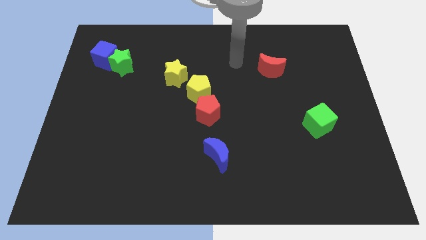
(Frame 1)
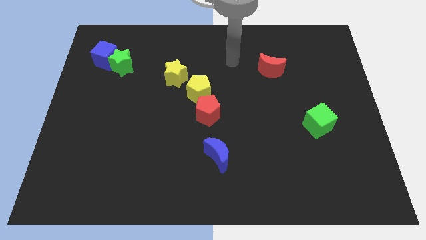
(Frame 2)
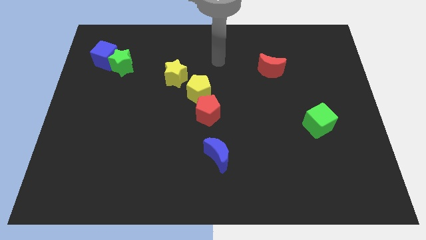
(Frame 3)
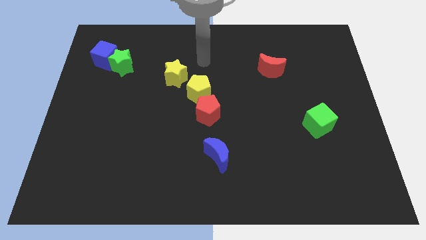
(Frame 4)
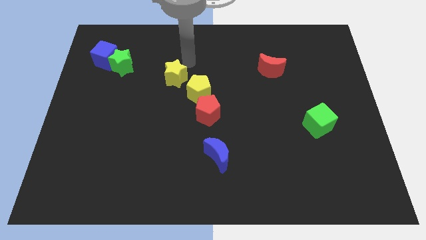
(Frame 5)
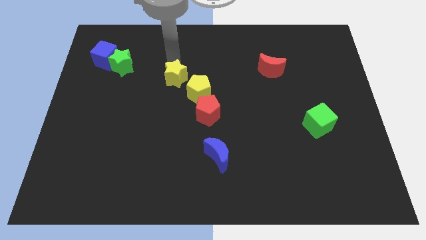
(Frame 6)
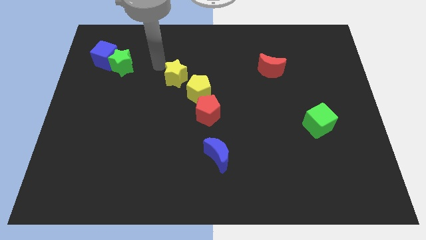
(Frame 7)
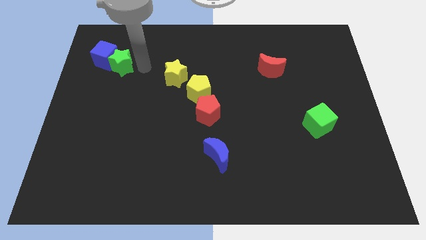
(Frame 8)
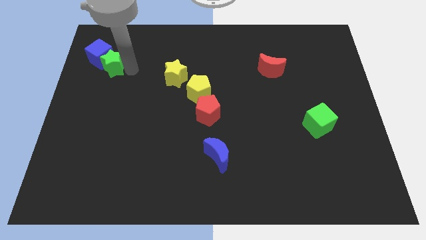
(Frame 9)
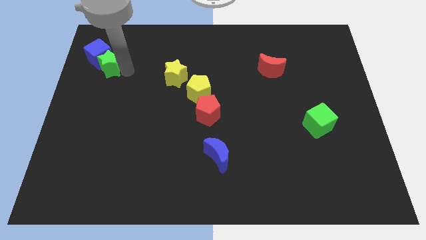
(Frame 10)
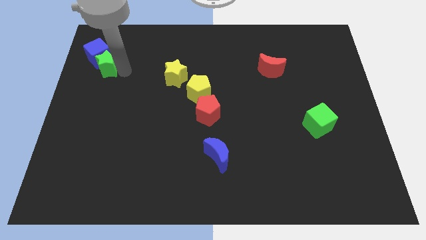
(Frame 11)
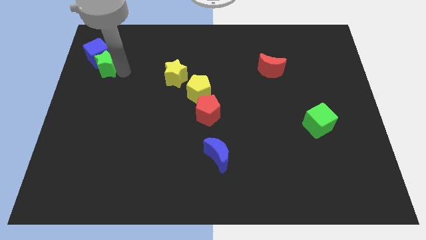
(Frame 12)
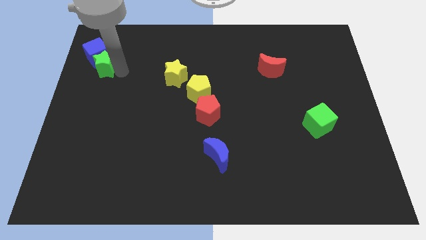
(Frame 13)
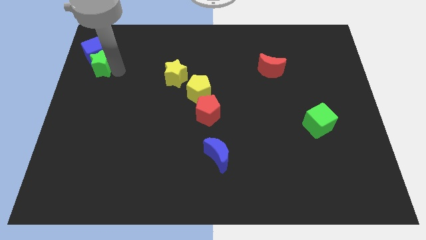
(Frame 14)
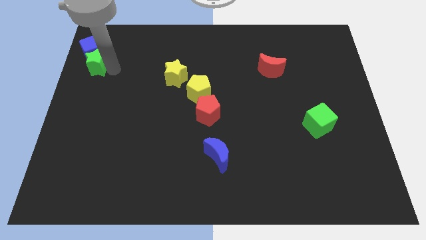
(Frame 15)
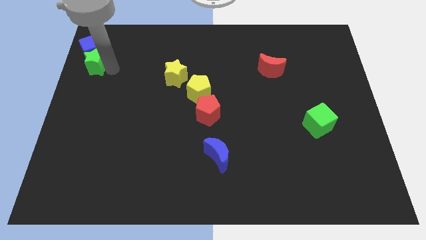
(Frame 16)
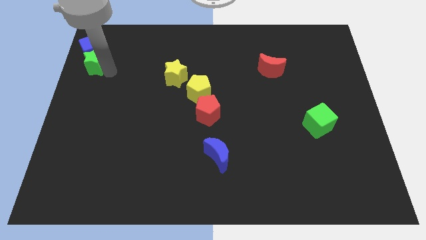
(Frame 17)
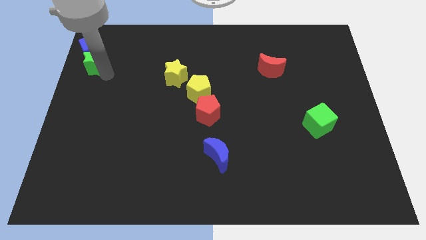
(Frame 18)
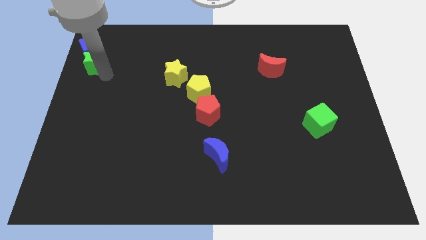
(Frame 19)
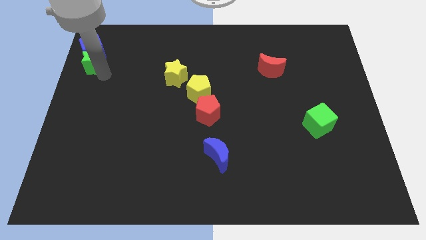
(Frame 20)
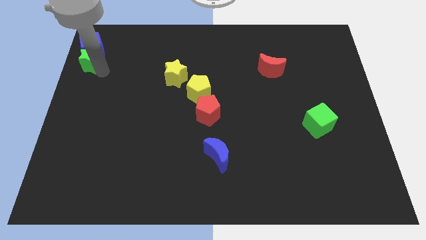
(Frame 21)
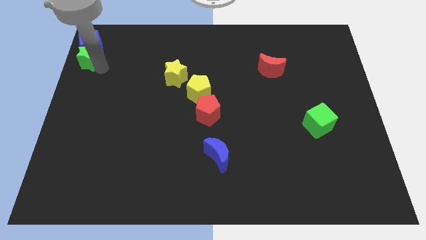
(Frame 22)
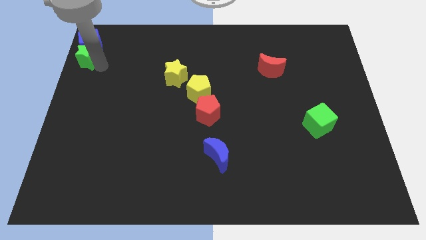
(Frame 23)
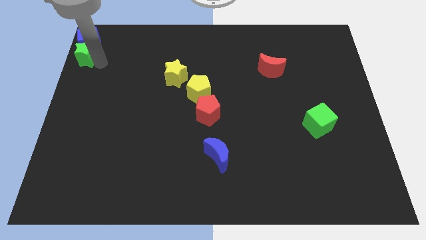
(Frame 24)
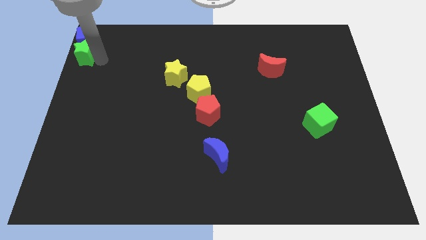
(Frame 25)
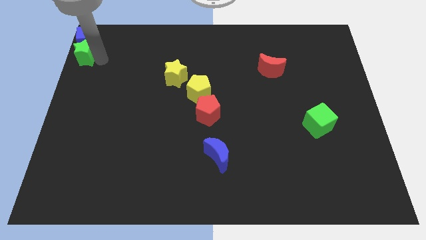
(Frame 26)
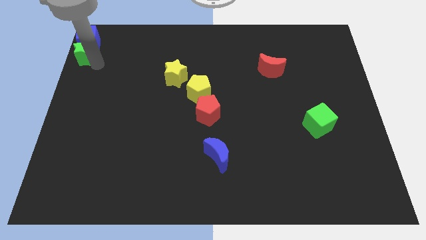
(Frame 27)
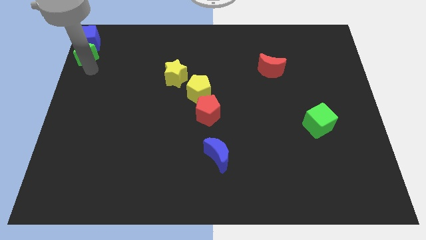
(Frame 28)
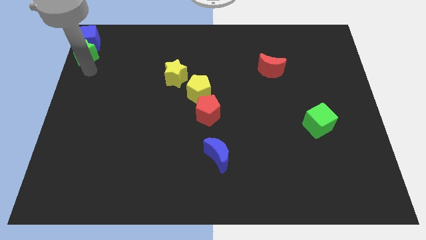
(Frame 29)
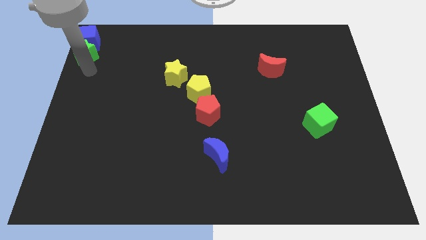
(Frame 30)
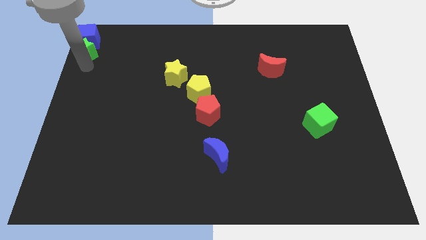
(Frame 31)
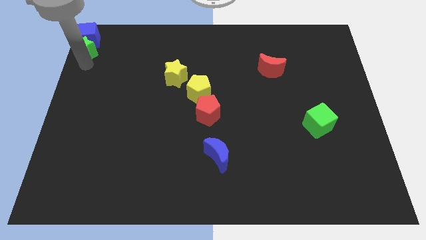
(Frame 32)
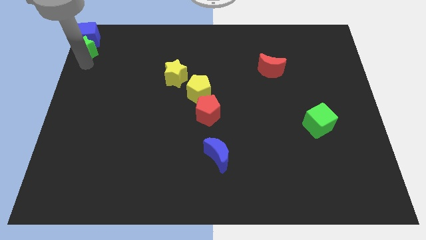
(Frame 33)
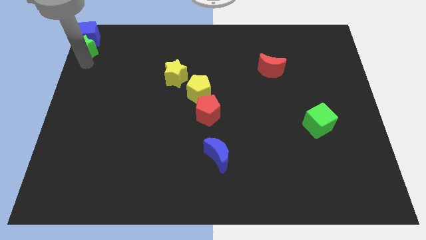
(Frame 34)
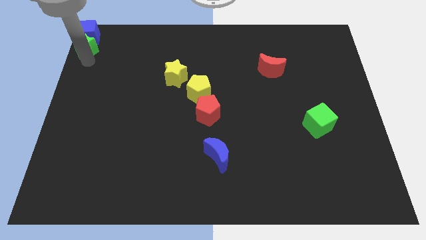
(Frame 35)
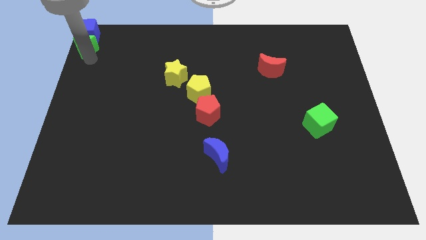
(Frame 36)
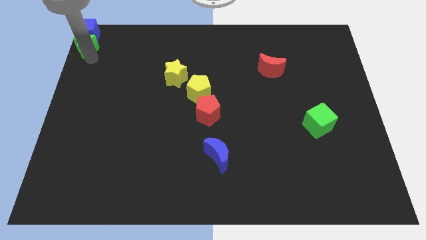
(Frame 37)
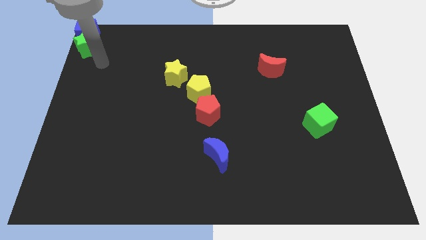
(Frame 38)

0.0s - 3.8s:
push the green star and blue cube to the top left corner

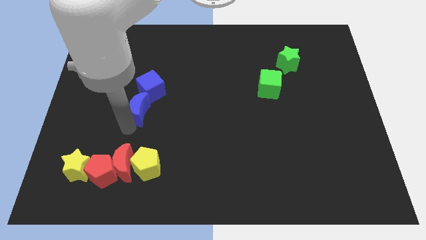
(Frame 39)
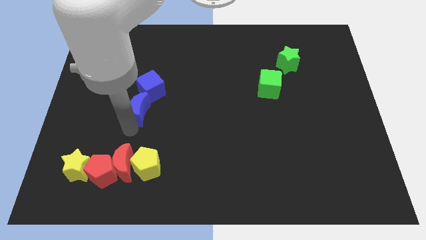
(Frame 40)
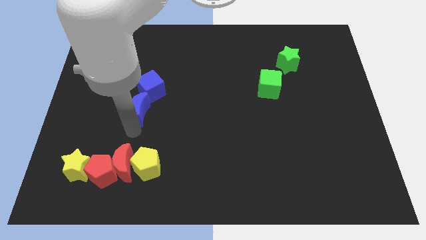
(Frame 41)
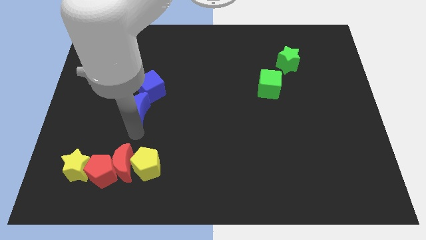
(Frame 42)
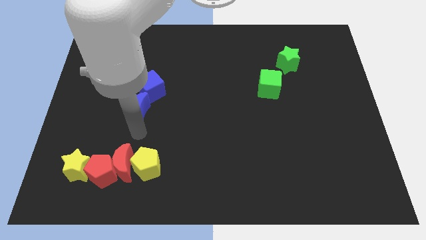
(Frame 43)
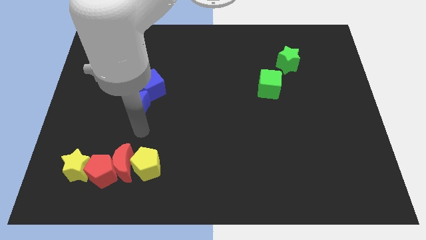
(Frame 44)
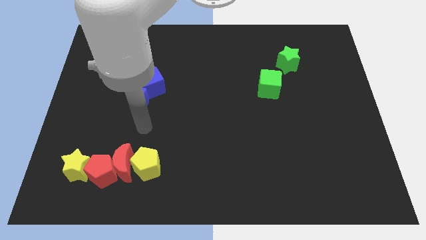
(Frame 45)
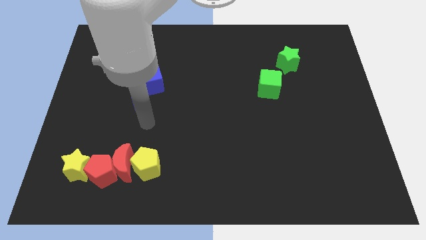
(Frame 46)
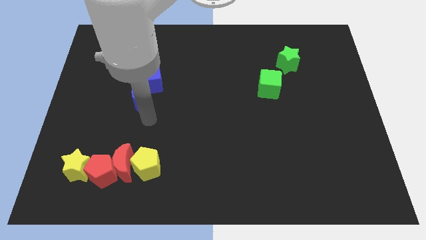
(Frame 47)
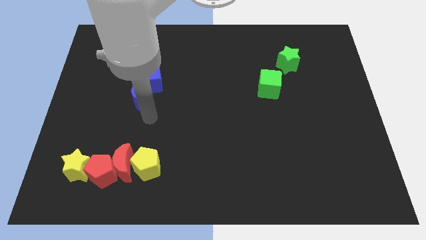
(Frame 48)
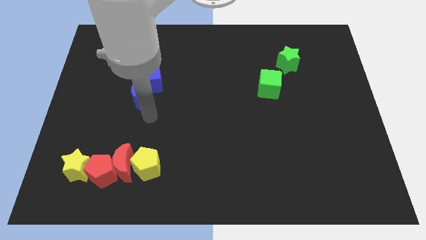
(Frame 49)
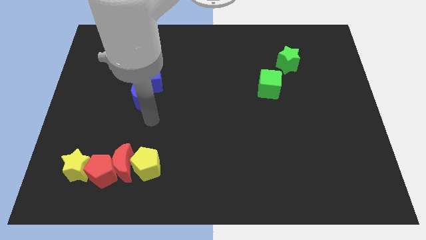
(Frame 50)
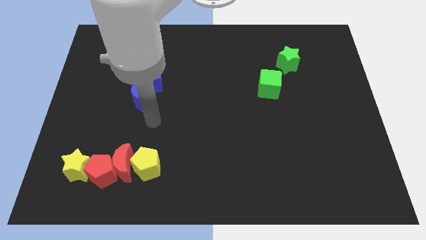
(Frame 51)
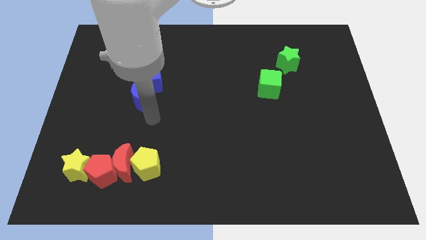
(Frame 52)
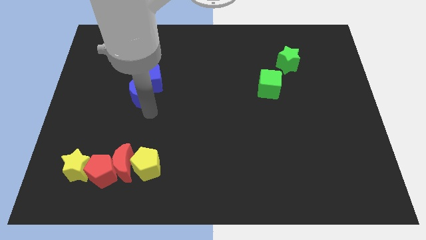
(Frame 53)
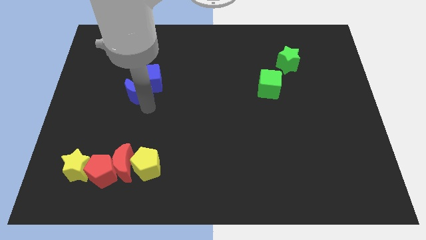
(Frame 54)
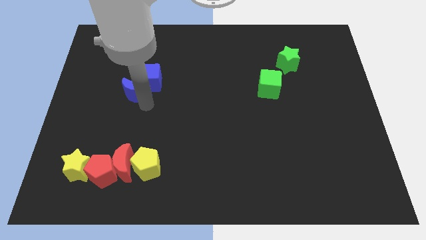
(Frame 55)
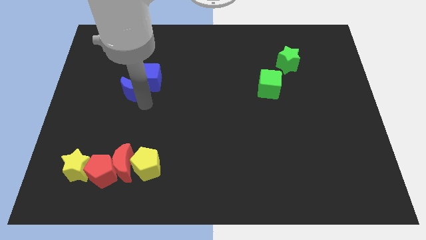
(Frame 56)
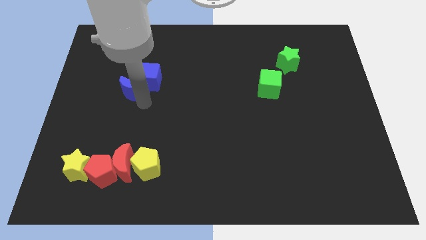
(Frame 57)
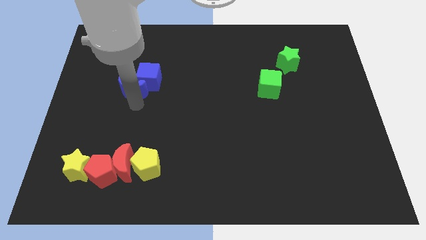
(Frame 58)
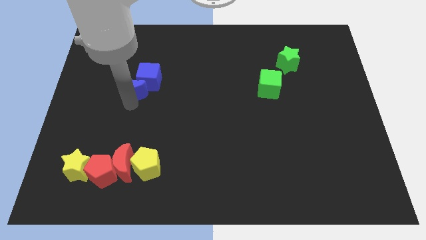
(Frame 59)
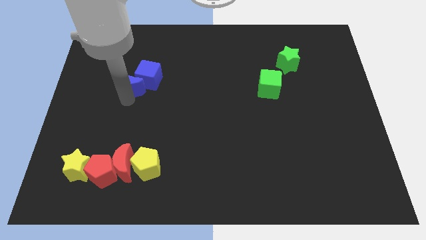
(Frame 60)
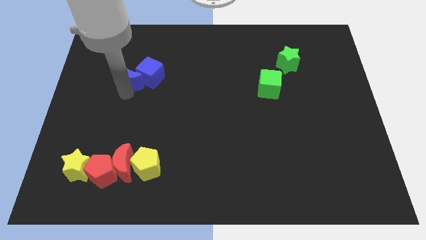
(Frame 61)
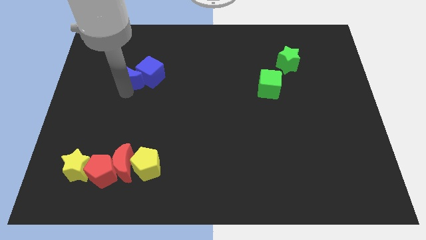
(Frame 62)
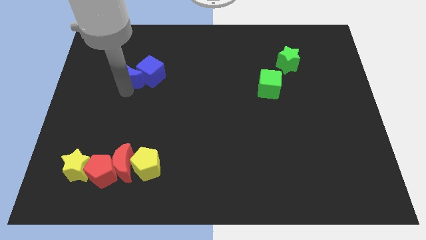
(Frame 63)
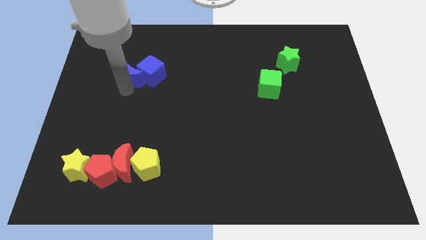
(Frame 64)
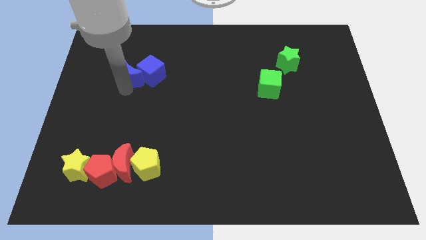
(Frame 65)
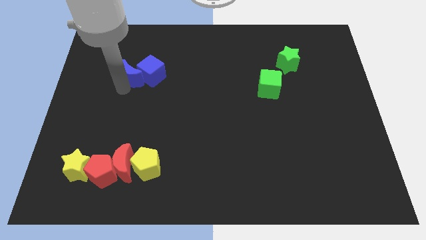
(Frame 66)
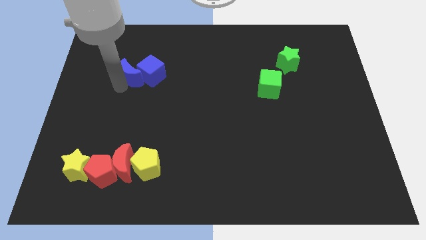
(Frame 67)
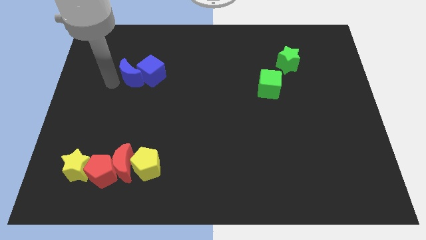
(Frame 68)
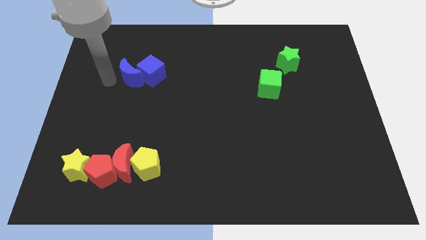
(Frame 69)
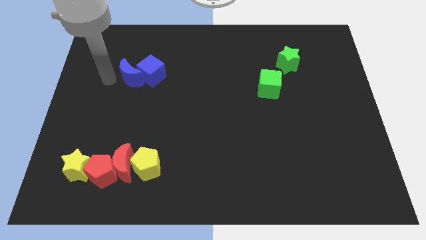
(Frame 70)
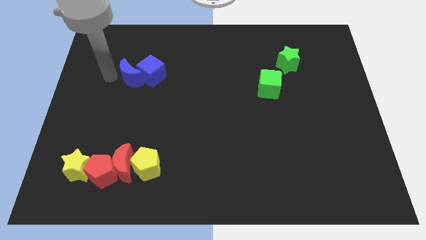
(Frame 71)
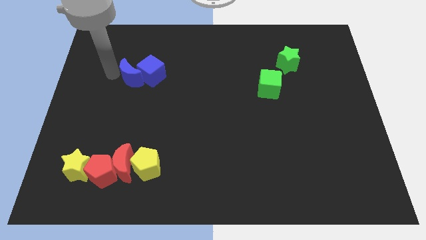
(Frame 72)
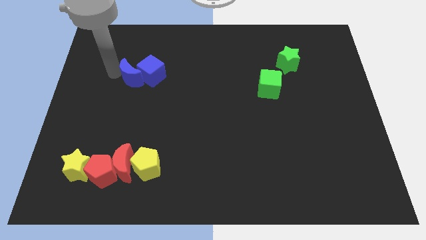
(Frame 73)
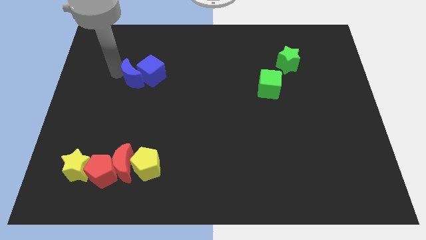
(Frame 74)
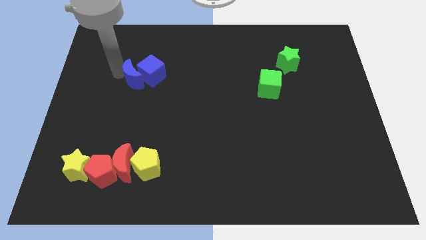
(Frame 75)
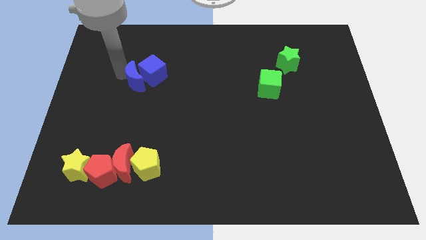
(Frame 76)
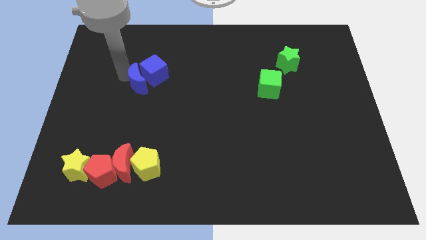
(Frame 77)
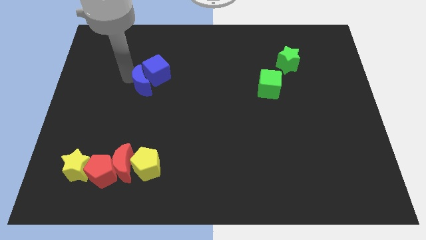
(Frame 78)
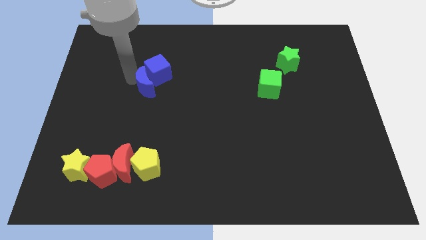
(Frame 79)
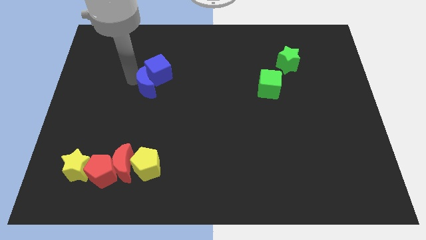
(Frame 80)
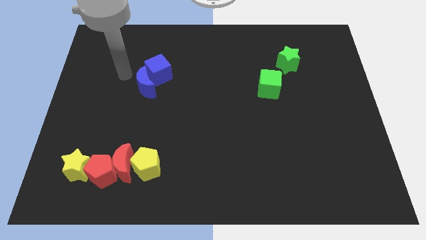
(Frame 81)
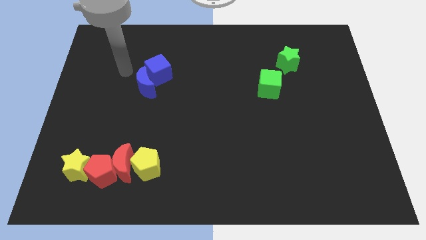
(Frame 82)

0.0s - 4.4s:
move the blue blocks to the left of green cube

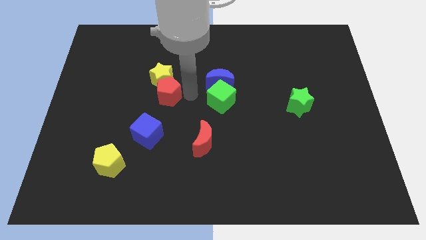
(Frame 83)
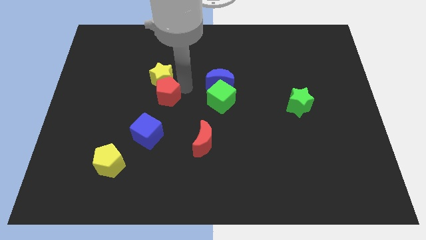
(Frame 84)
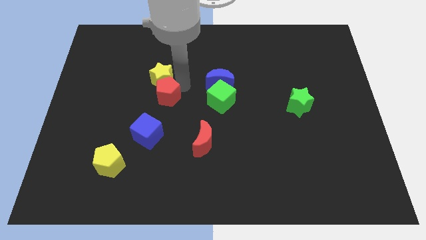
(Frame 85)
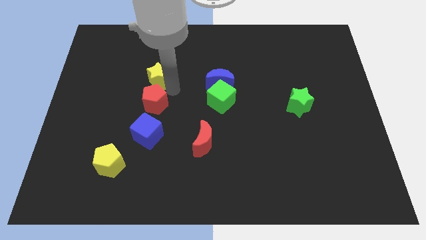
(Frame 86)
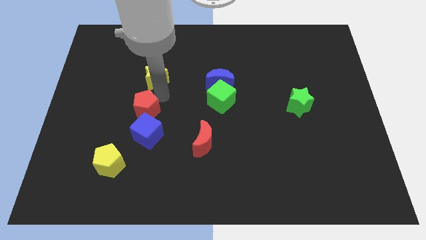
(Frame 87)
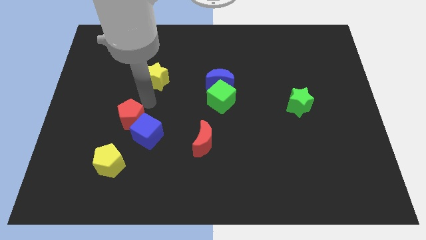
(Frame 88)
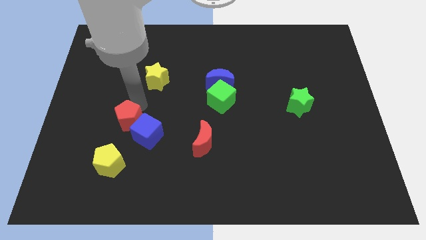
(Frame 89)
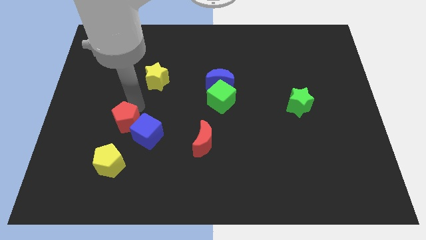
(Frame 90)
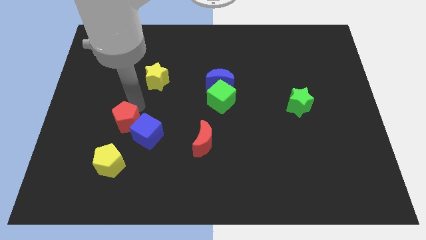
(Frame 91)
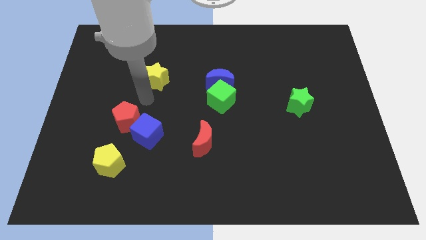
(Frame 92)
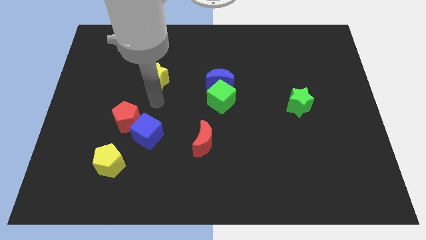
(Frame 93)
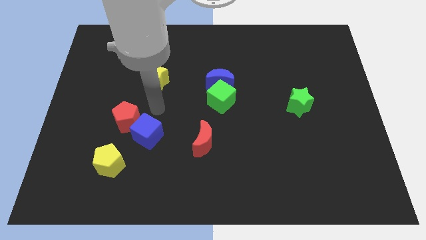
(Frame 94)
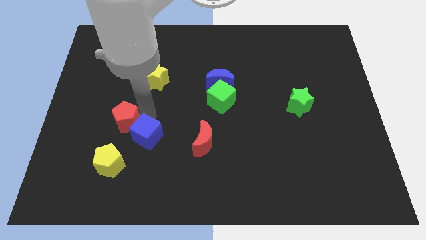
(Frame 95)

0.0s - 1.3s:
push the red pentagon to the top left of the blue cube
